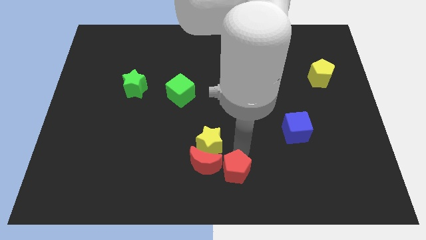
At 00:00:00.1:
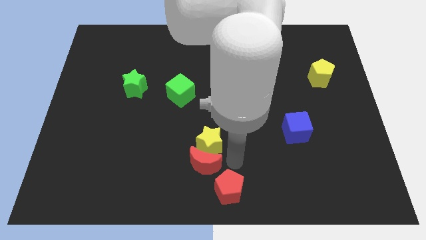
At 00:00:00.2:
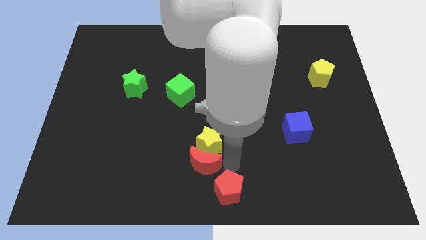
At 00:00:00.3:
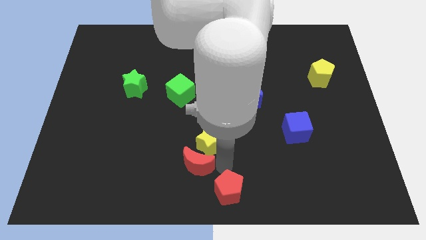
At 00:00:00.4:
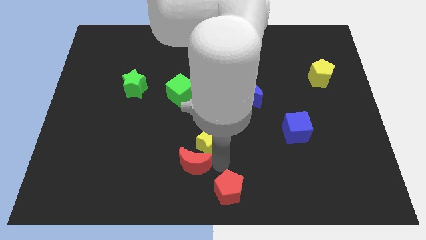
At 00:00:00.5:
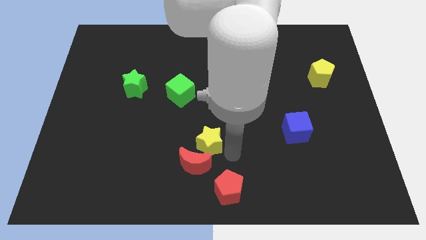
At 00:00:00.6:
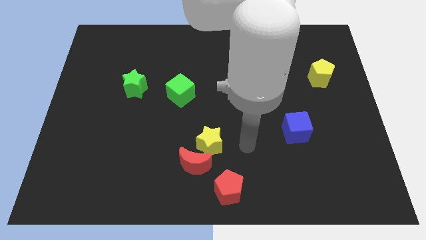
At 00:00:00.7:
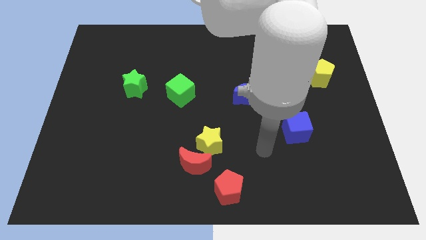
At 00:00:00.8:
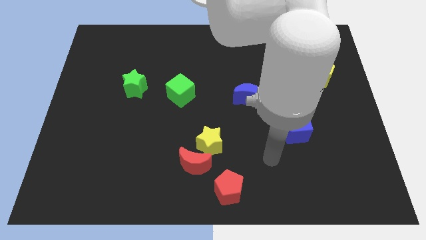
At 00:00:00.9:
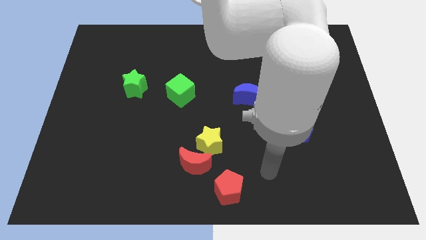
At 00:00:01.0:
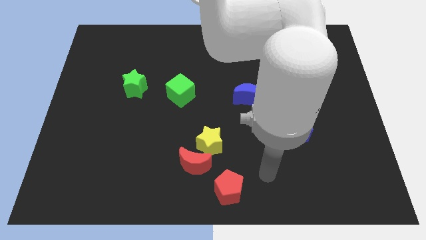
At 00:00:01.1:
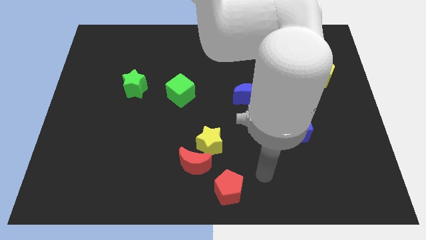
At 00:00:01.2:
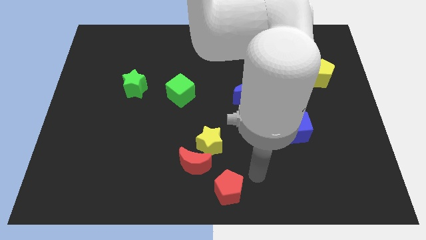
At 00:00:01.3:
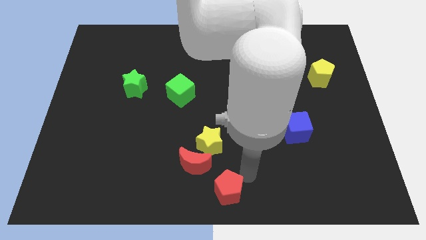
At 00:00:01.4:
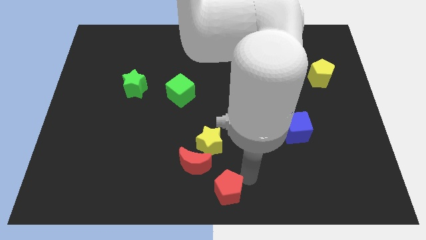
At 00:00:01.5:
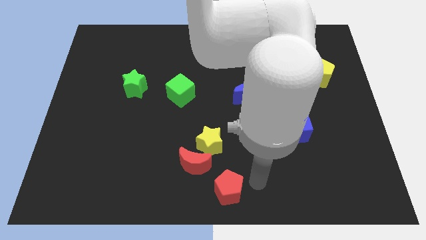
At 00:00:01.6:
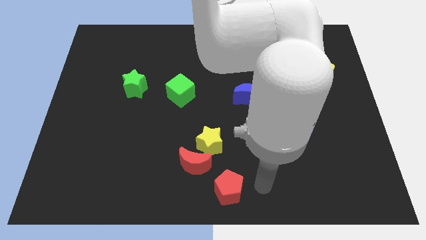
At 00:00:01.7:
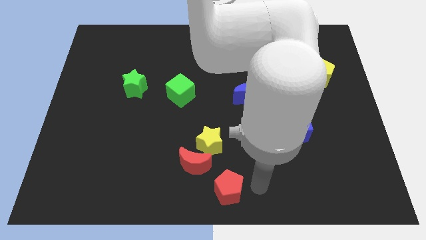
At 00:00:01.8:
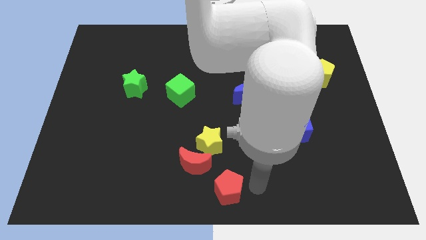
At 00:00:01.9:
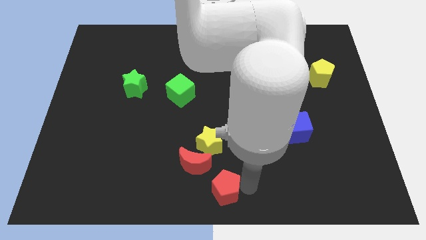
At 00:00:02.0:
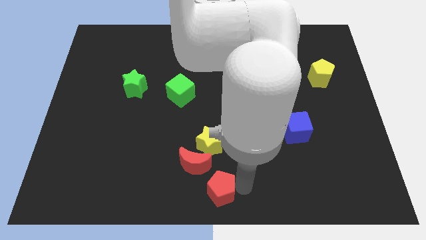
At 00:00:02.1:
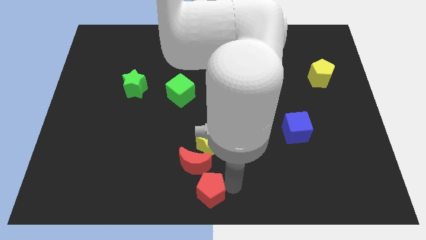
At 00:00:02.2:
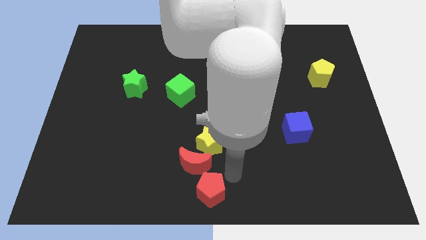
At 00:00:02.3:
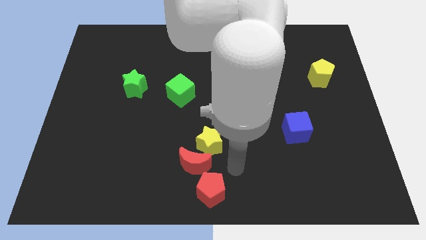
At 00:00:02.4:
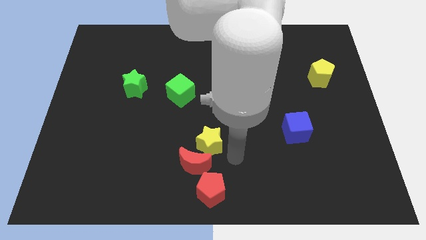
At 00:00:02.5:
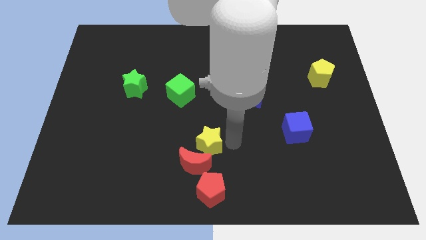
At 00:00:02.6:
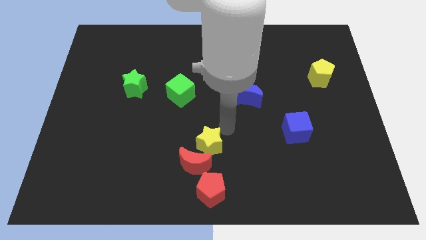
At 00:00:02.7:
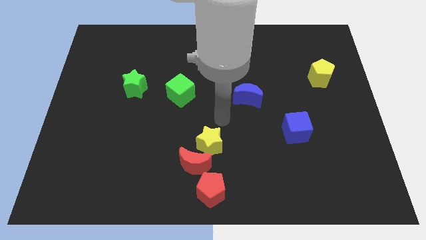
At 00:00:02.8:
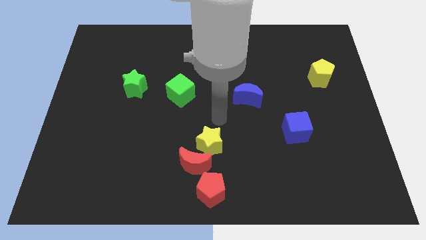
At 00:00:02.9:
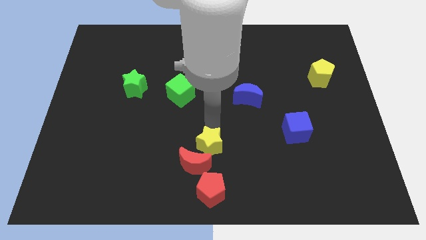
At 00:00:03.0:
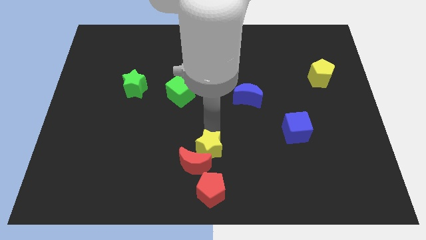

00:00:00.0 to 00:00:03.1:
place the red pentagon towards the bottom center of the board

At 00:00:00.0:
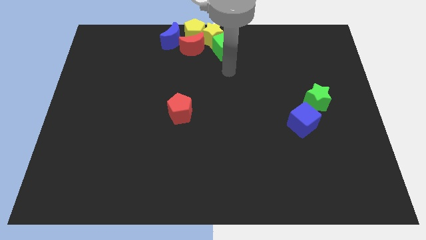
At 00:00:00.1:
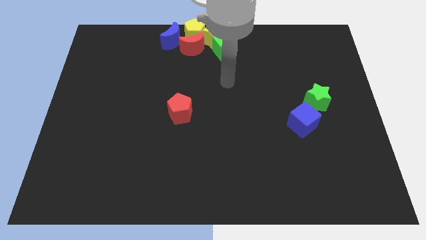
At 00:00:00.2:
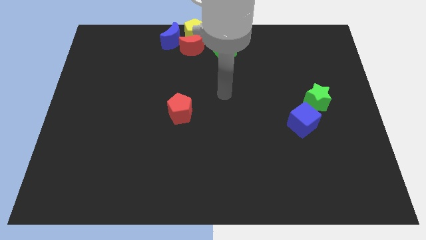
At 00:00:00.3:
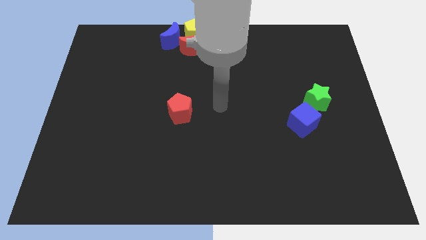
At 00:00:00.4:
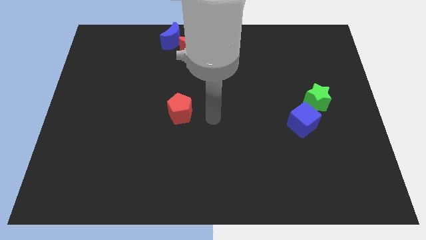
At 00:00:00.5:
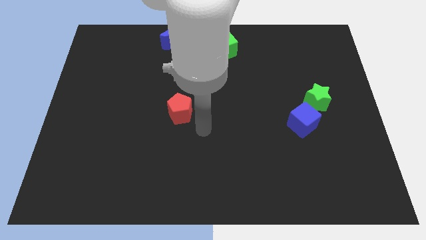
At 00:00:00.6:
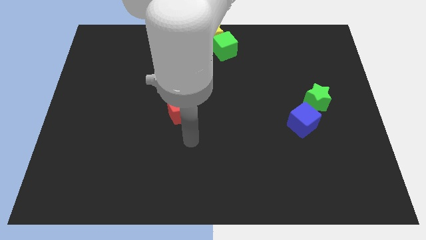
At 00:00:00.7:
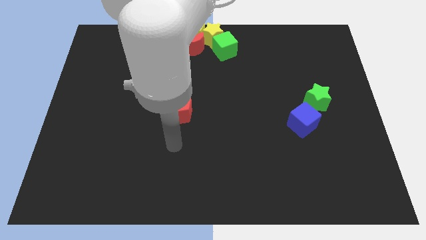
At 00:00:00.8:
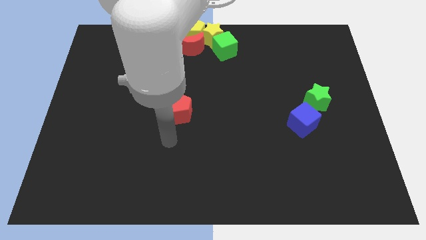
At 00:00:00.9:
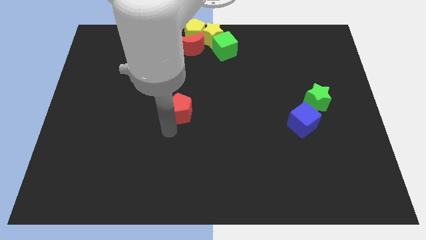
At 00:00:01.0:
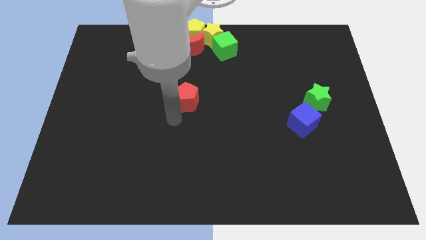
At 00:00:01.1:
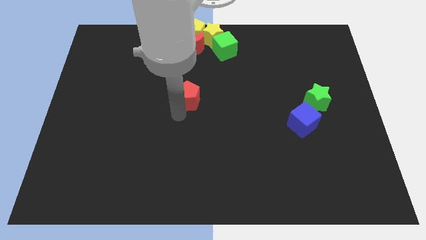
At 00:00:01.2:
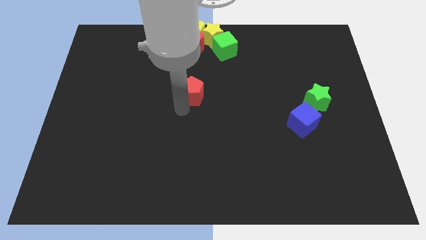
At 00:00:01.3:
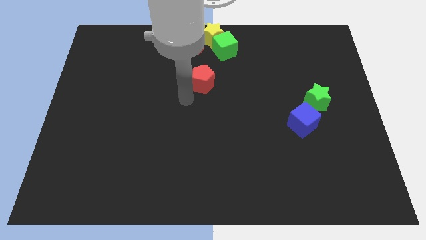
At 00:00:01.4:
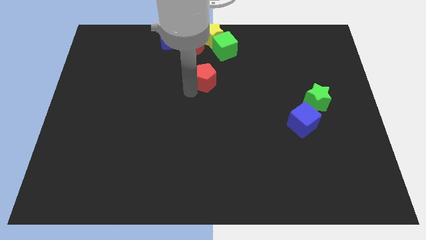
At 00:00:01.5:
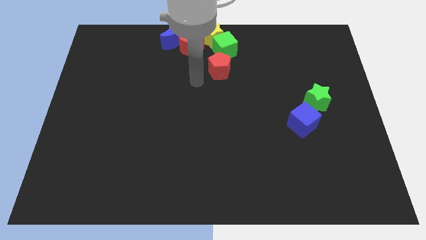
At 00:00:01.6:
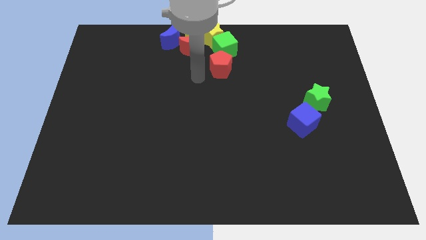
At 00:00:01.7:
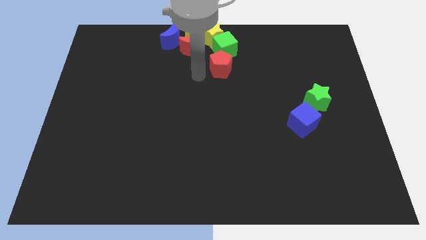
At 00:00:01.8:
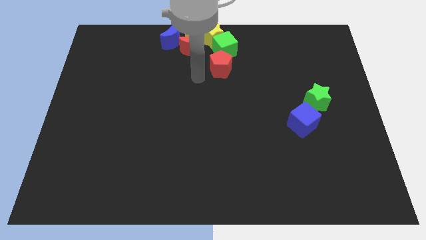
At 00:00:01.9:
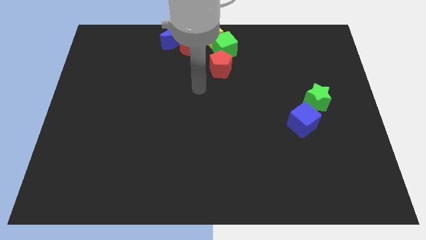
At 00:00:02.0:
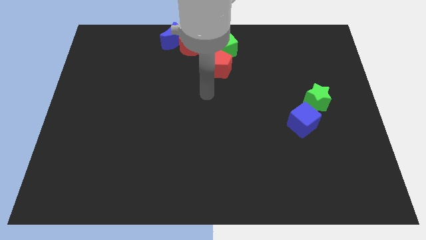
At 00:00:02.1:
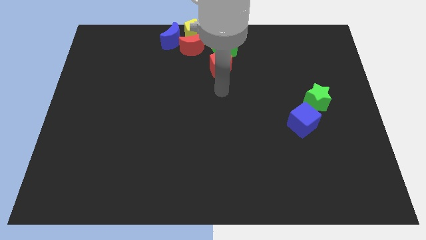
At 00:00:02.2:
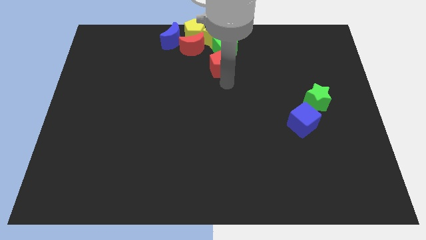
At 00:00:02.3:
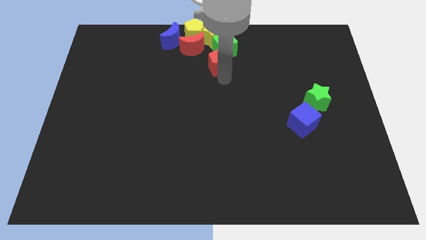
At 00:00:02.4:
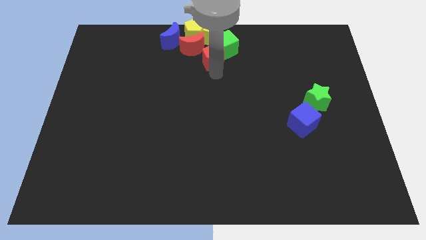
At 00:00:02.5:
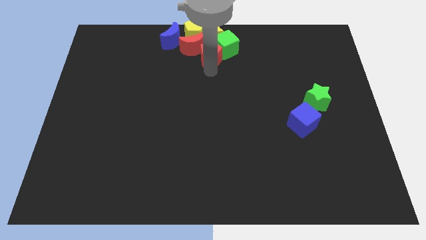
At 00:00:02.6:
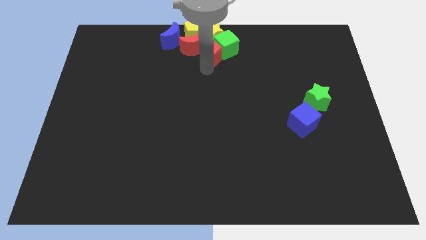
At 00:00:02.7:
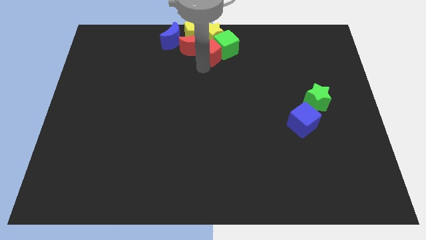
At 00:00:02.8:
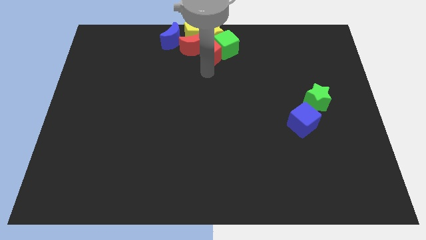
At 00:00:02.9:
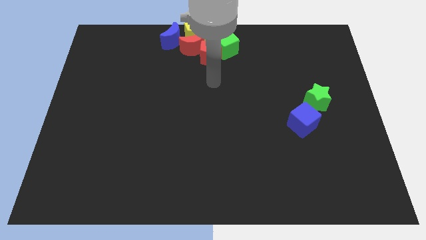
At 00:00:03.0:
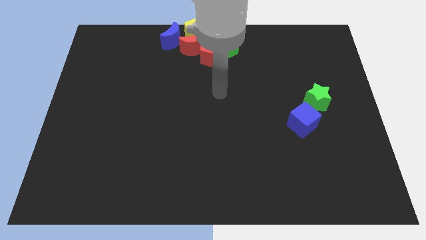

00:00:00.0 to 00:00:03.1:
slide red pentagon to green cube

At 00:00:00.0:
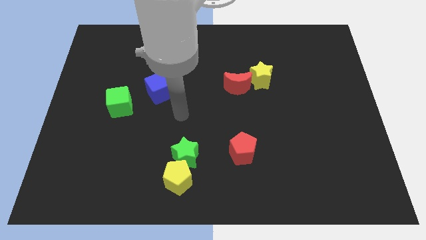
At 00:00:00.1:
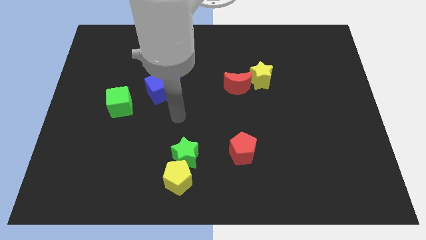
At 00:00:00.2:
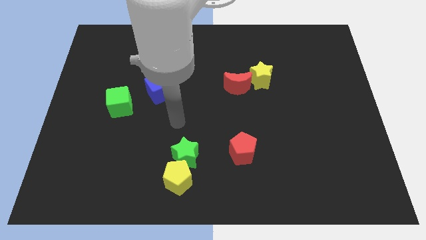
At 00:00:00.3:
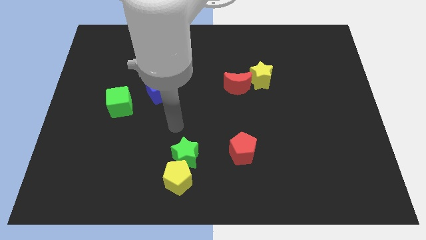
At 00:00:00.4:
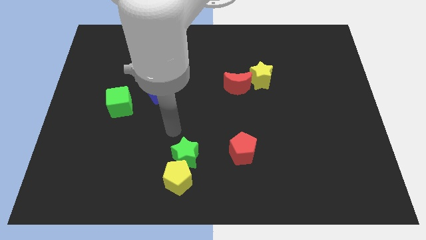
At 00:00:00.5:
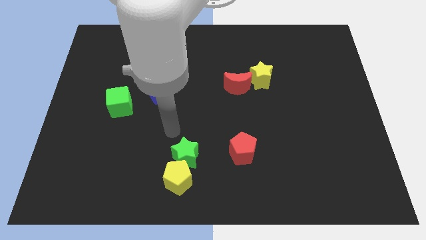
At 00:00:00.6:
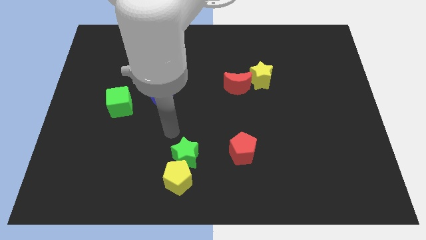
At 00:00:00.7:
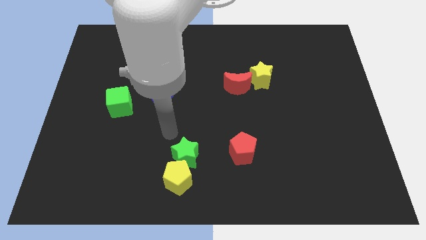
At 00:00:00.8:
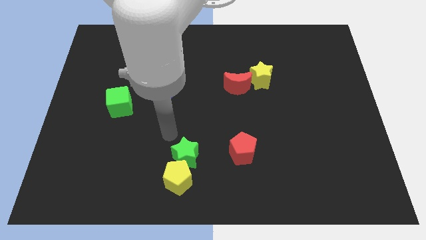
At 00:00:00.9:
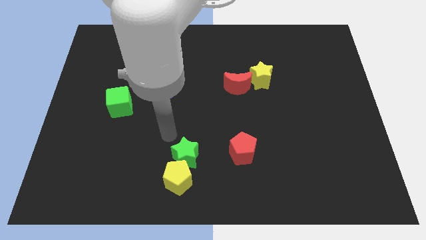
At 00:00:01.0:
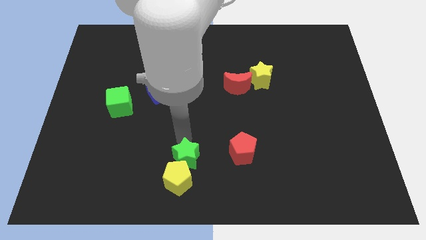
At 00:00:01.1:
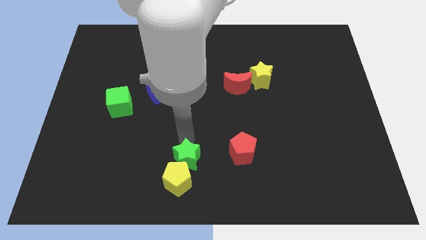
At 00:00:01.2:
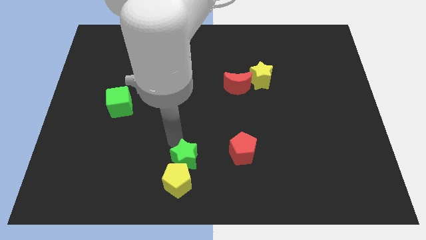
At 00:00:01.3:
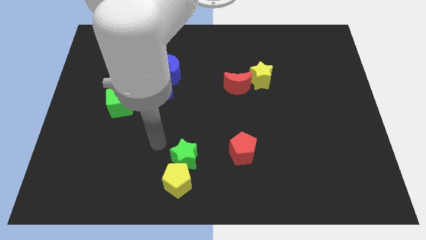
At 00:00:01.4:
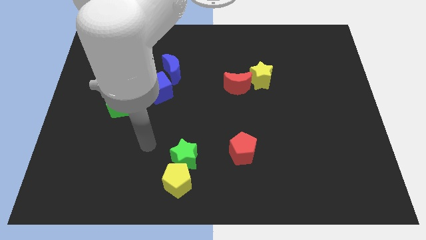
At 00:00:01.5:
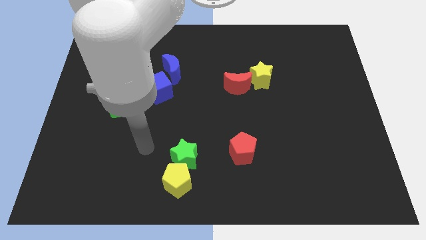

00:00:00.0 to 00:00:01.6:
push the green star along with the yellow pentagon slightly to the bottom

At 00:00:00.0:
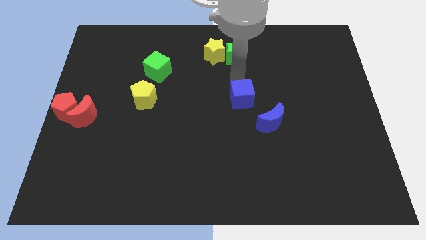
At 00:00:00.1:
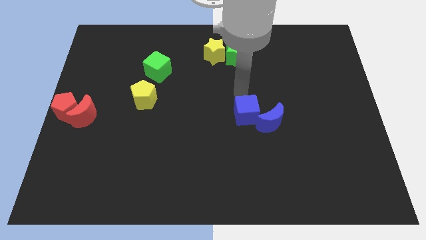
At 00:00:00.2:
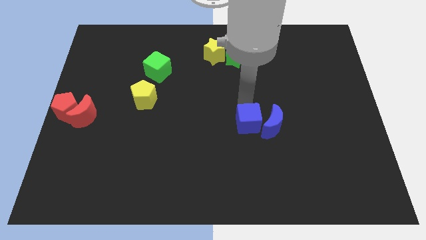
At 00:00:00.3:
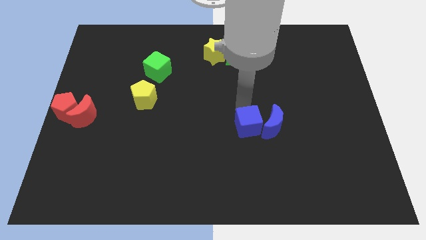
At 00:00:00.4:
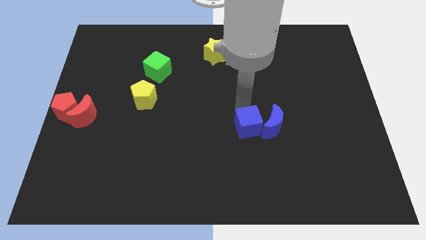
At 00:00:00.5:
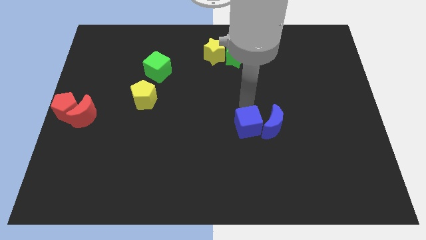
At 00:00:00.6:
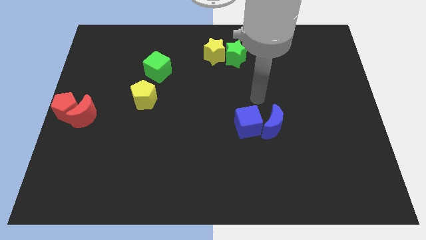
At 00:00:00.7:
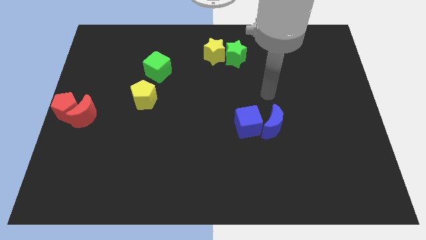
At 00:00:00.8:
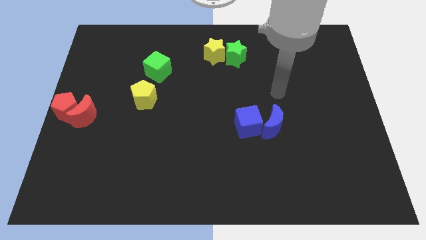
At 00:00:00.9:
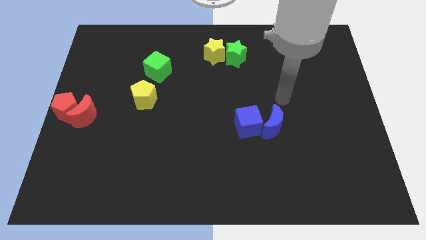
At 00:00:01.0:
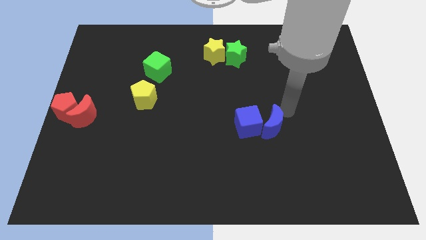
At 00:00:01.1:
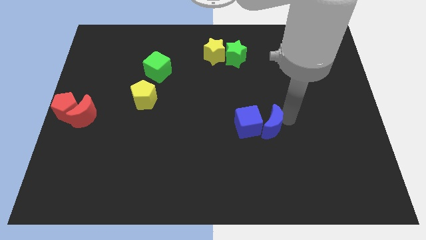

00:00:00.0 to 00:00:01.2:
push the blue cube close to the blue crescent
